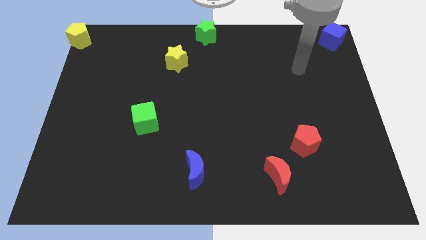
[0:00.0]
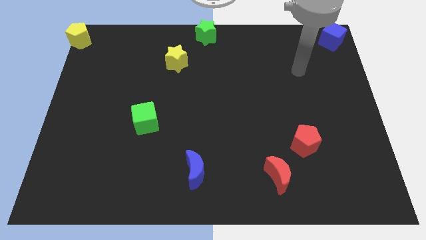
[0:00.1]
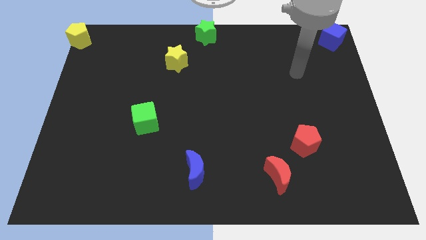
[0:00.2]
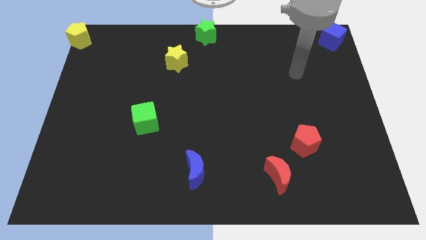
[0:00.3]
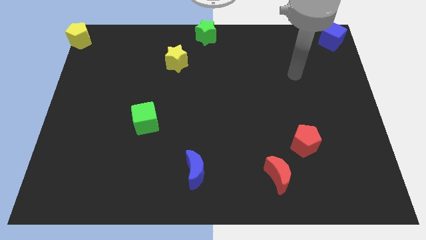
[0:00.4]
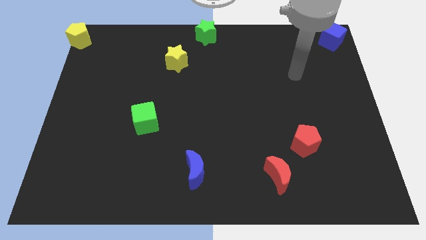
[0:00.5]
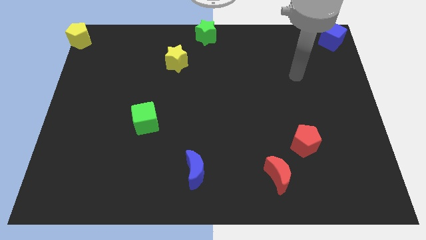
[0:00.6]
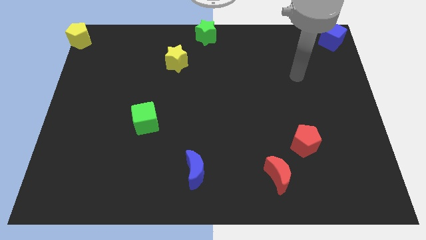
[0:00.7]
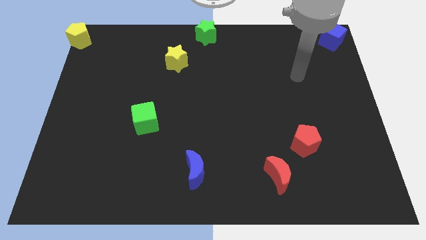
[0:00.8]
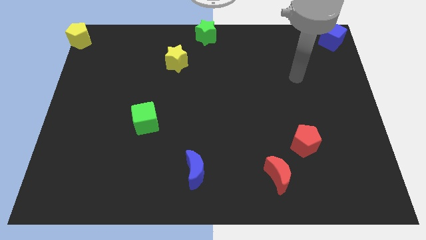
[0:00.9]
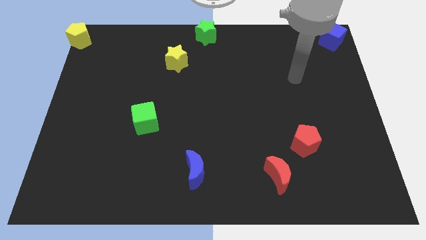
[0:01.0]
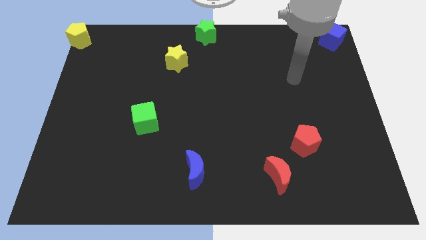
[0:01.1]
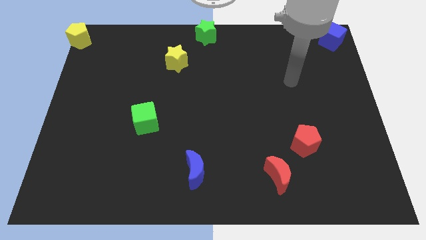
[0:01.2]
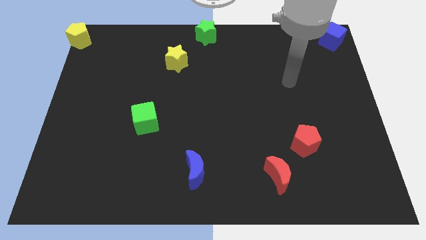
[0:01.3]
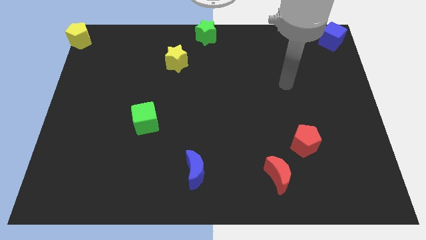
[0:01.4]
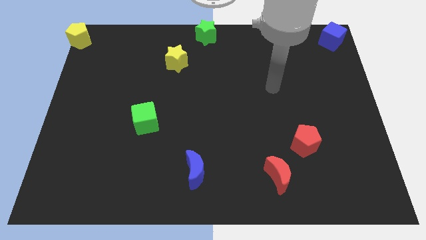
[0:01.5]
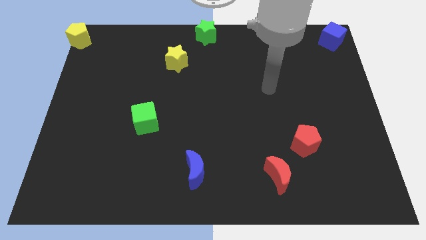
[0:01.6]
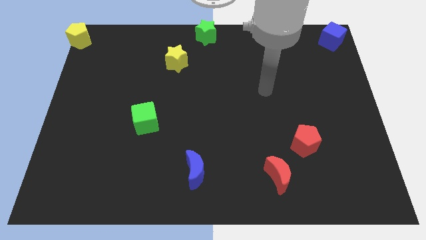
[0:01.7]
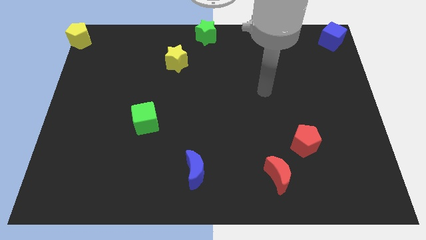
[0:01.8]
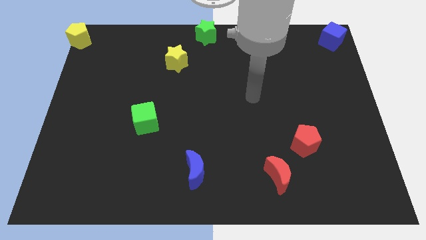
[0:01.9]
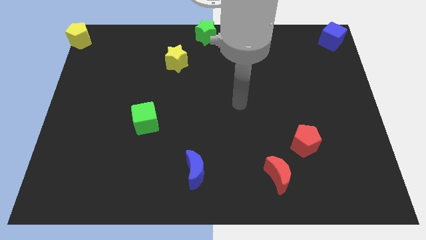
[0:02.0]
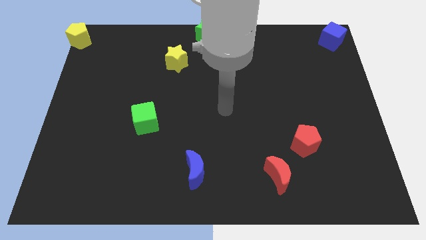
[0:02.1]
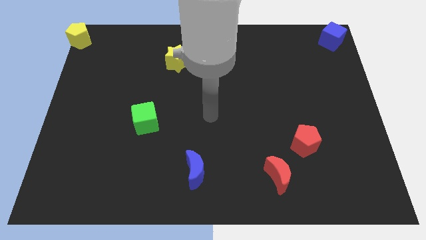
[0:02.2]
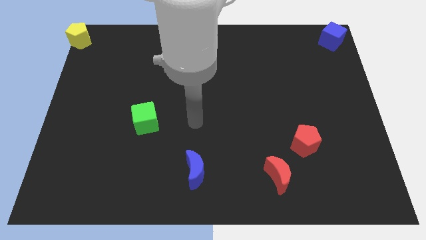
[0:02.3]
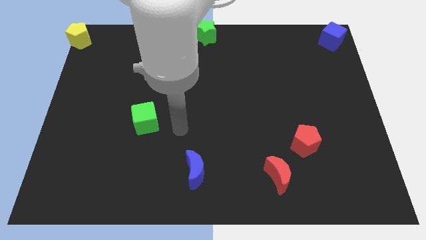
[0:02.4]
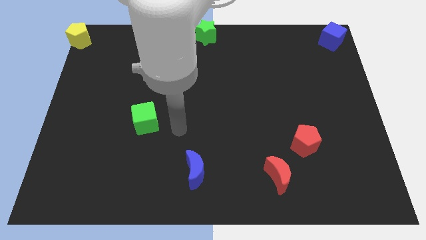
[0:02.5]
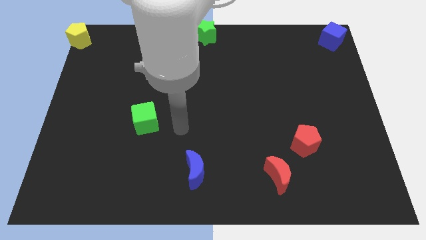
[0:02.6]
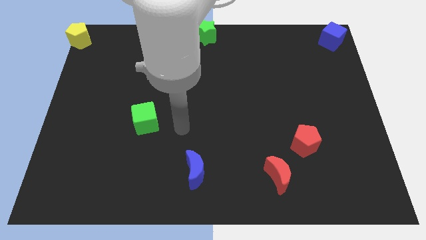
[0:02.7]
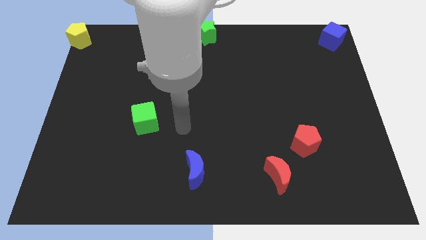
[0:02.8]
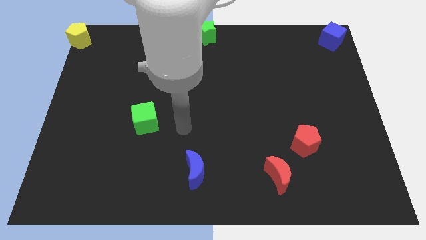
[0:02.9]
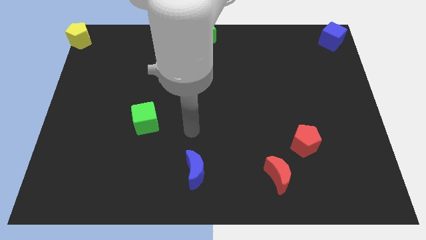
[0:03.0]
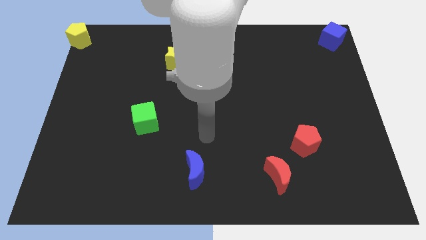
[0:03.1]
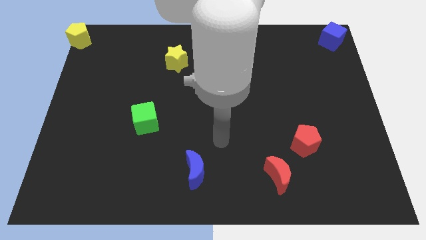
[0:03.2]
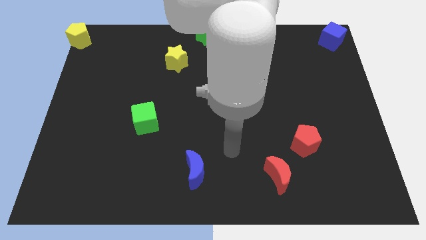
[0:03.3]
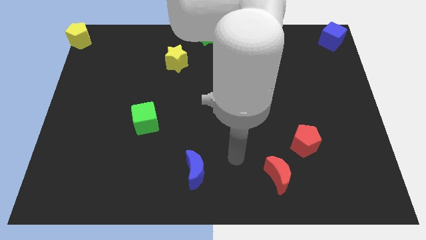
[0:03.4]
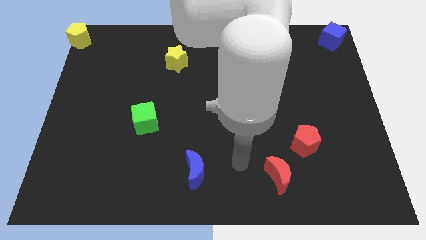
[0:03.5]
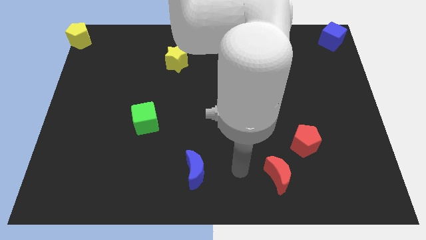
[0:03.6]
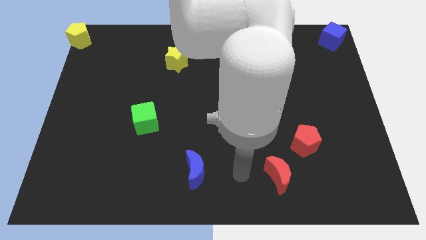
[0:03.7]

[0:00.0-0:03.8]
move the arm and point between red and blue crescent

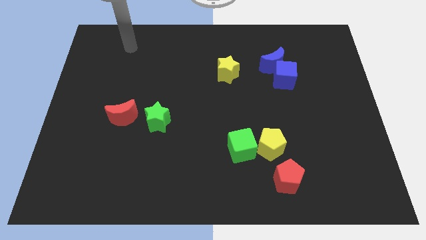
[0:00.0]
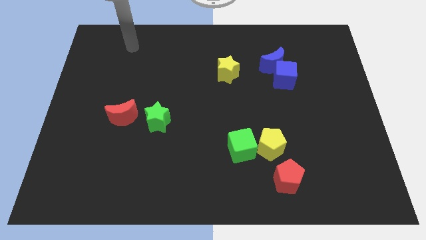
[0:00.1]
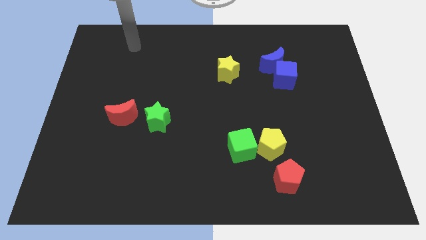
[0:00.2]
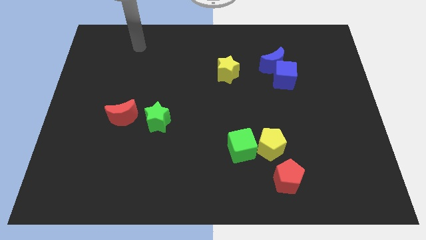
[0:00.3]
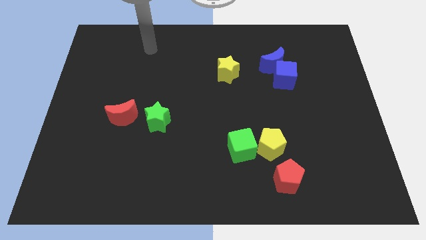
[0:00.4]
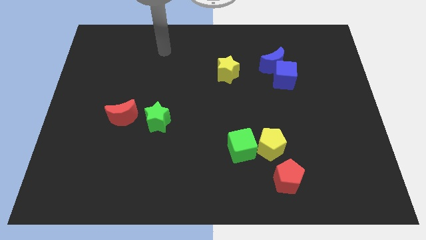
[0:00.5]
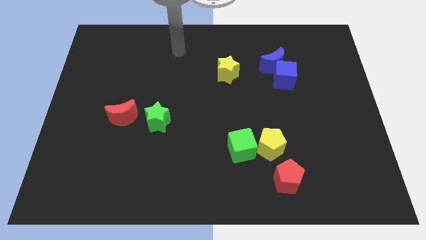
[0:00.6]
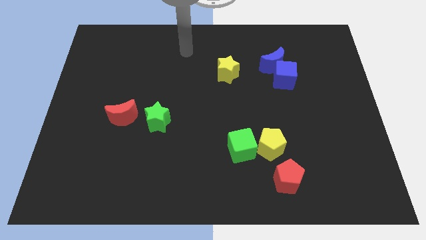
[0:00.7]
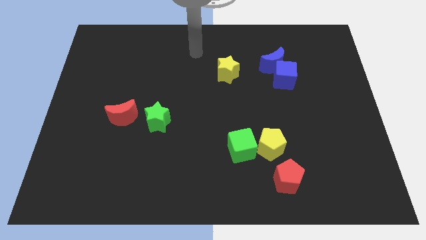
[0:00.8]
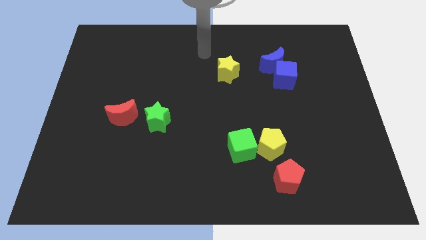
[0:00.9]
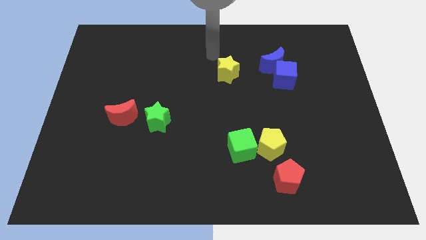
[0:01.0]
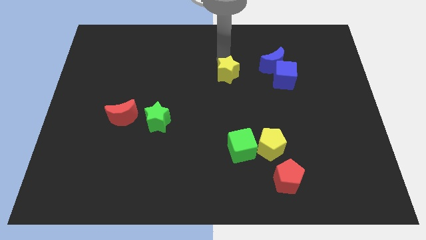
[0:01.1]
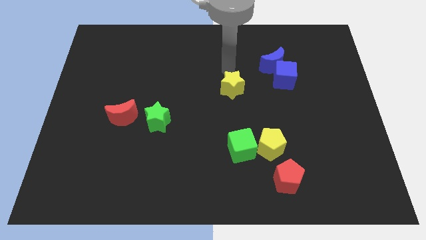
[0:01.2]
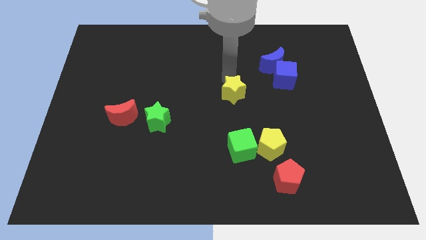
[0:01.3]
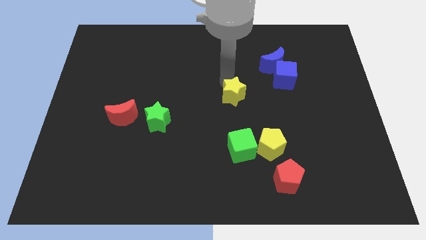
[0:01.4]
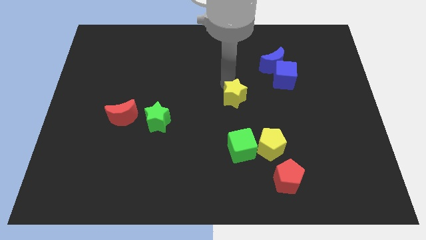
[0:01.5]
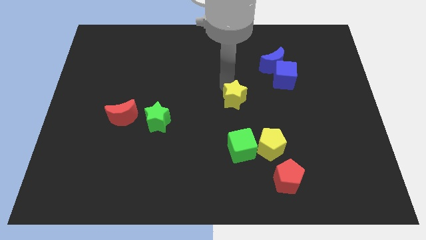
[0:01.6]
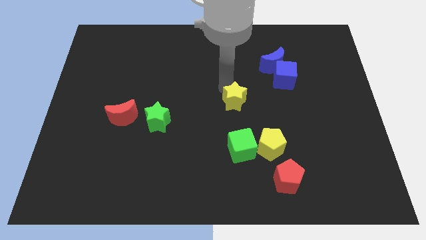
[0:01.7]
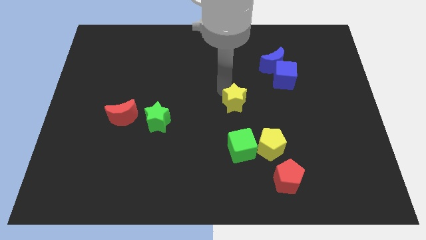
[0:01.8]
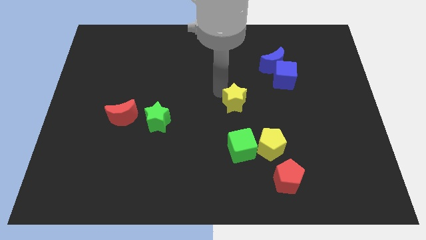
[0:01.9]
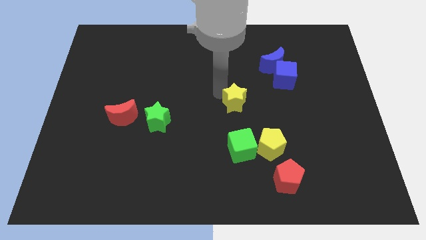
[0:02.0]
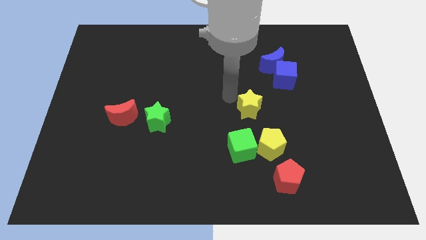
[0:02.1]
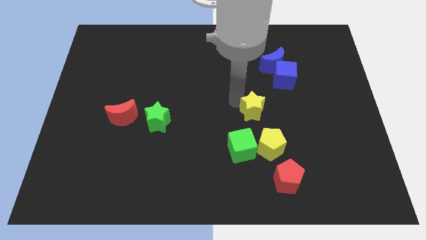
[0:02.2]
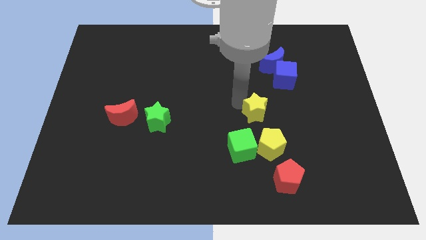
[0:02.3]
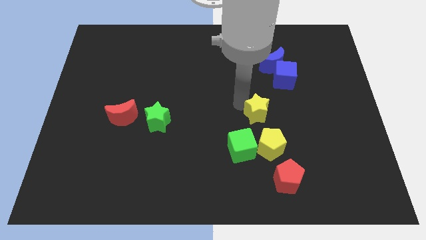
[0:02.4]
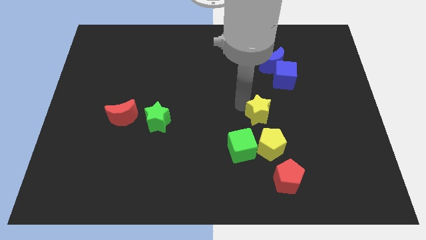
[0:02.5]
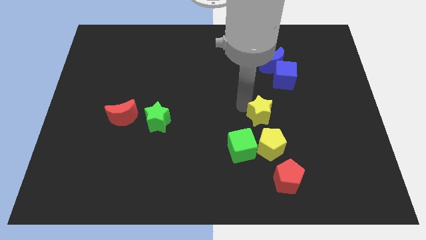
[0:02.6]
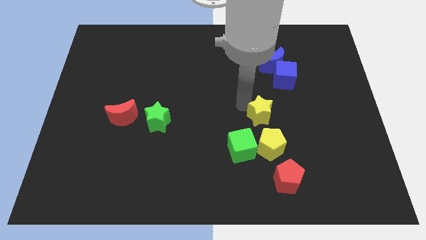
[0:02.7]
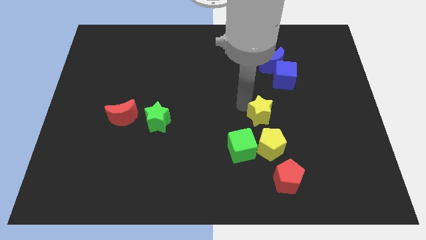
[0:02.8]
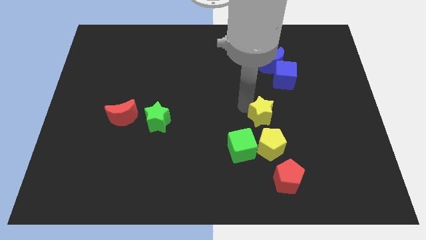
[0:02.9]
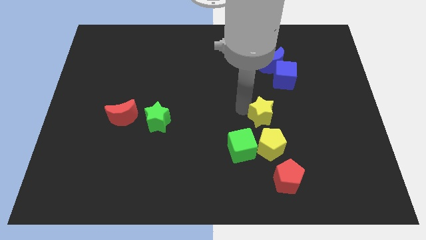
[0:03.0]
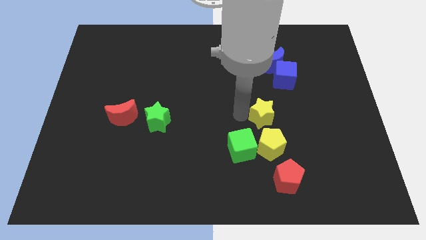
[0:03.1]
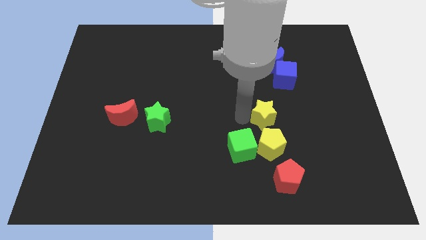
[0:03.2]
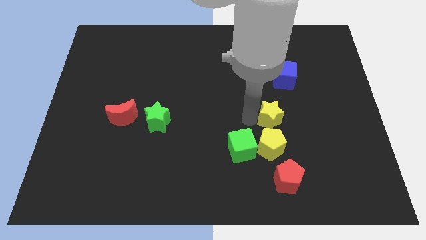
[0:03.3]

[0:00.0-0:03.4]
place the yellow star above the yellow pentagon

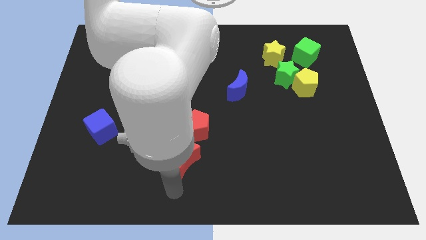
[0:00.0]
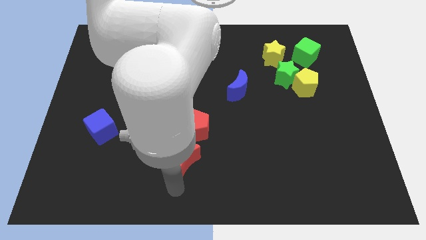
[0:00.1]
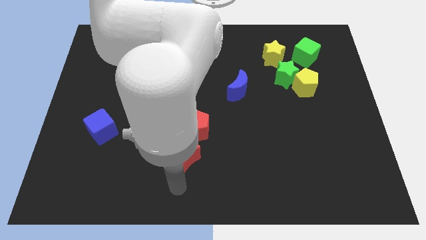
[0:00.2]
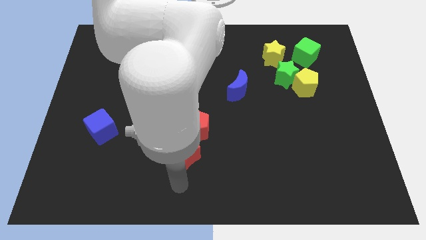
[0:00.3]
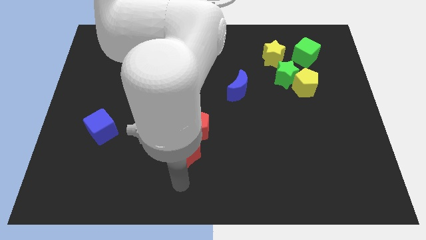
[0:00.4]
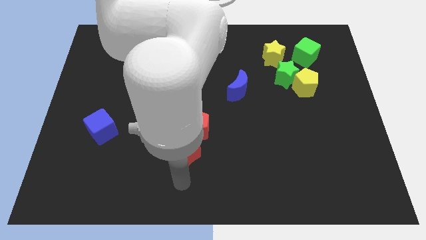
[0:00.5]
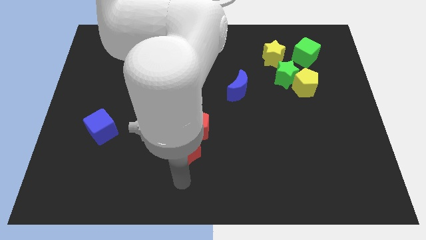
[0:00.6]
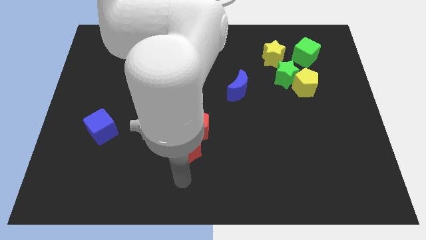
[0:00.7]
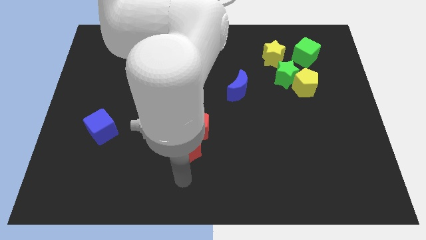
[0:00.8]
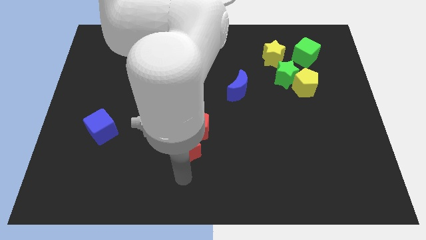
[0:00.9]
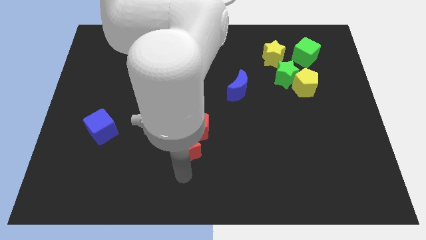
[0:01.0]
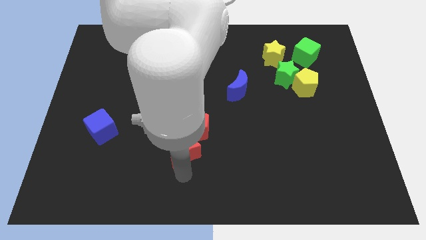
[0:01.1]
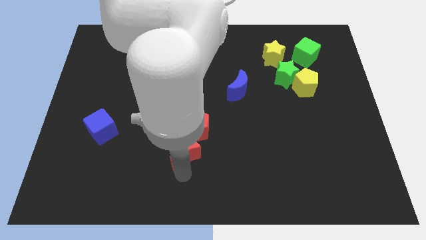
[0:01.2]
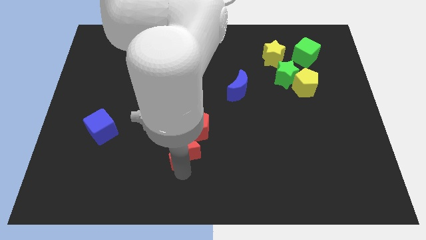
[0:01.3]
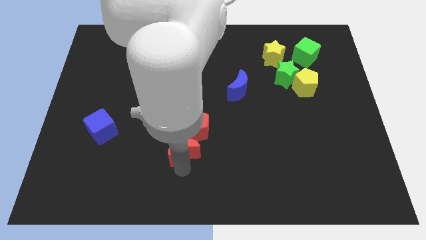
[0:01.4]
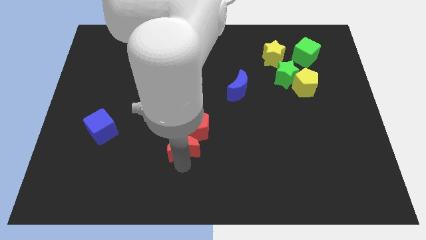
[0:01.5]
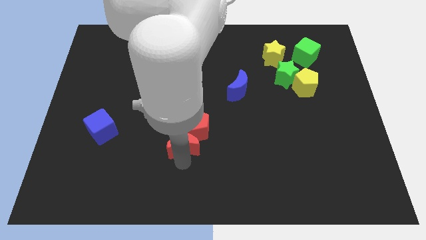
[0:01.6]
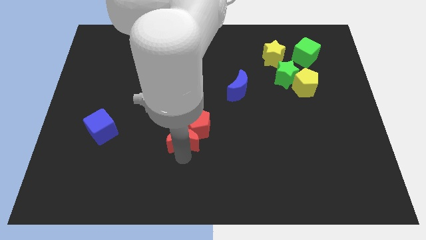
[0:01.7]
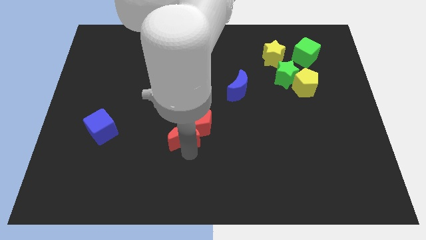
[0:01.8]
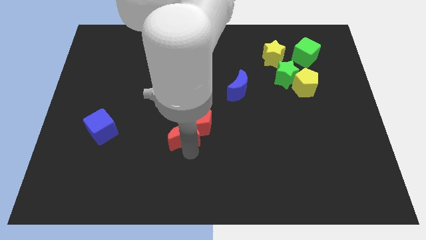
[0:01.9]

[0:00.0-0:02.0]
move red crescent close to red pentagon
